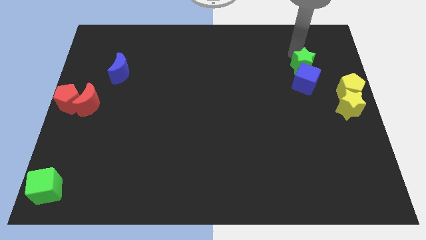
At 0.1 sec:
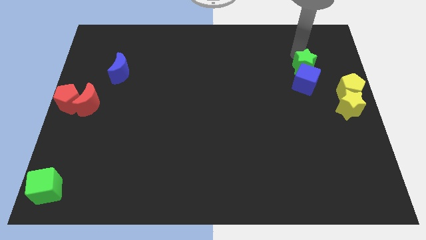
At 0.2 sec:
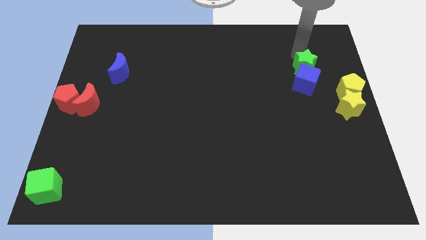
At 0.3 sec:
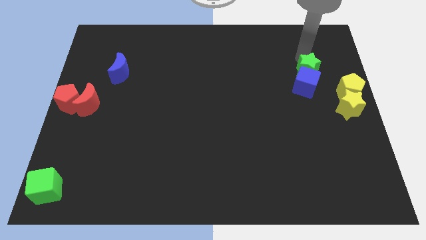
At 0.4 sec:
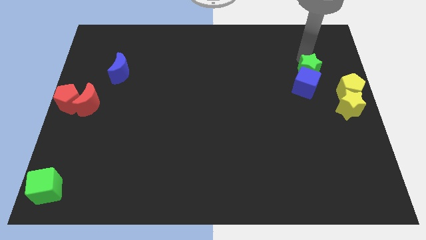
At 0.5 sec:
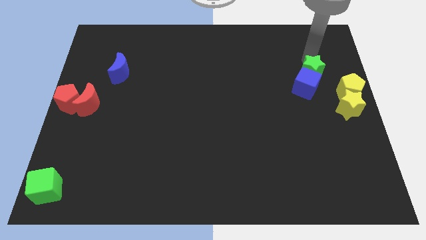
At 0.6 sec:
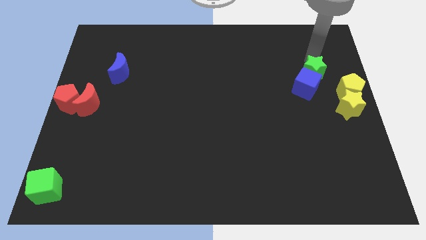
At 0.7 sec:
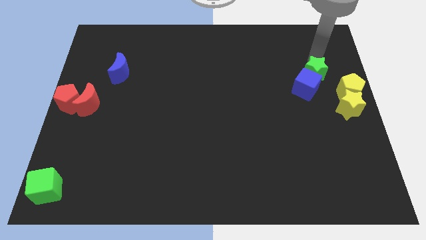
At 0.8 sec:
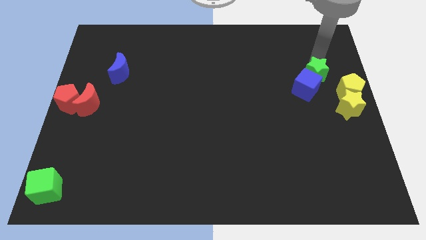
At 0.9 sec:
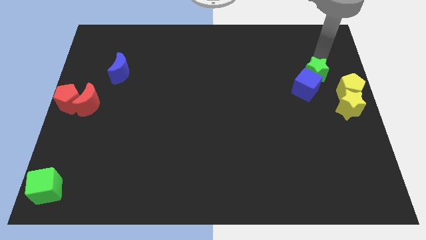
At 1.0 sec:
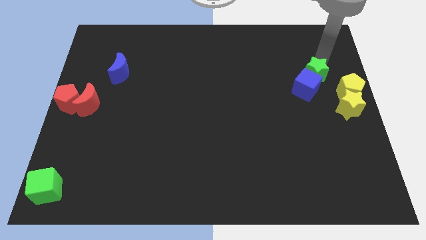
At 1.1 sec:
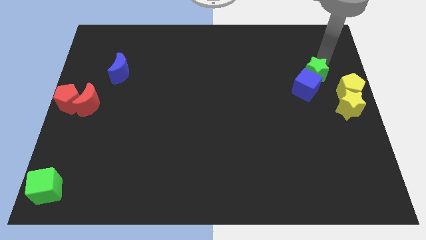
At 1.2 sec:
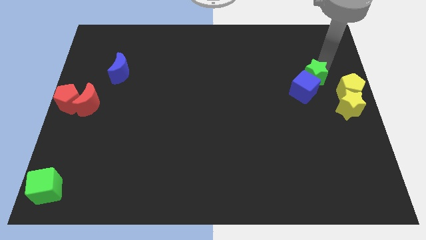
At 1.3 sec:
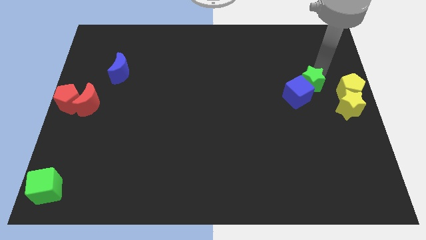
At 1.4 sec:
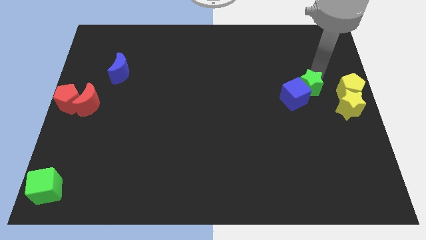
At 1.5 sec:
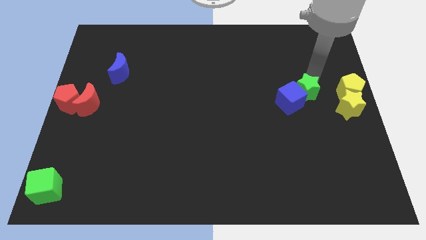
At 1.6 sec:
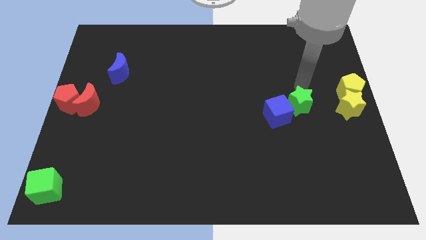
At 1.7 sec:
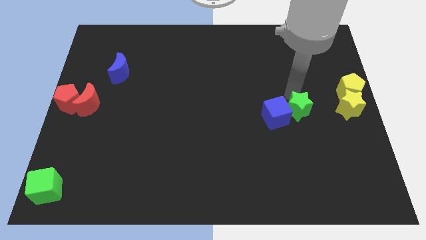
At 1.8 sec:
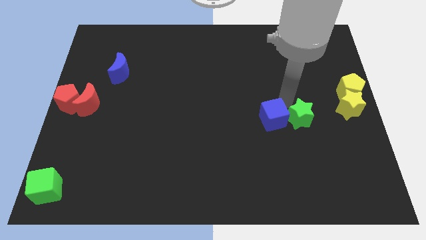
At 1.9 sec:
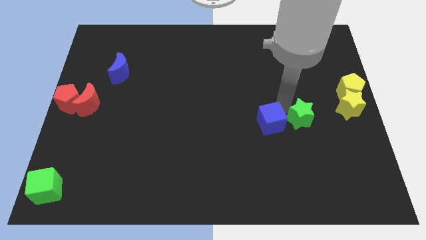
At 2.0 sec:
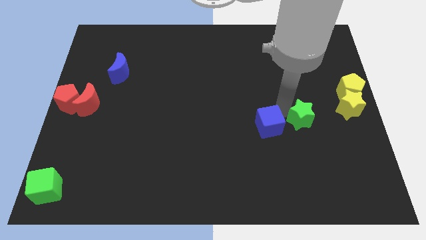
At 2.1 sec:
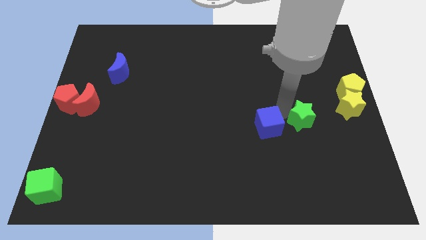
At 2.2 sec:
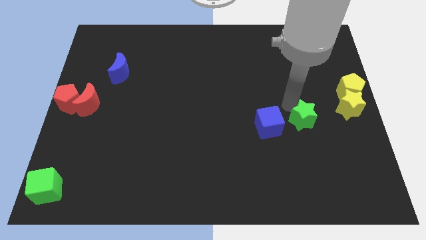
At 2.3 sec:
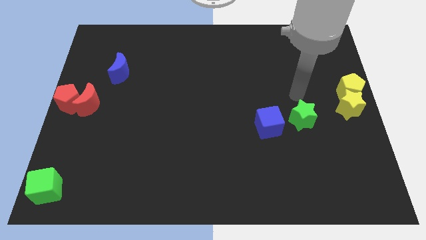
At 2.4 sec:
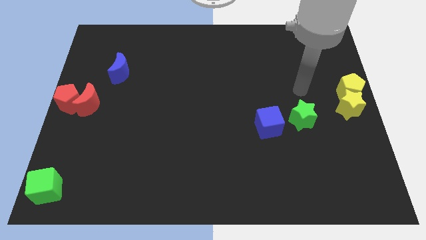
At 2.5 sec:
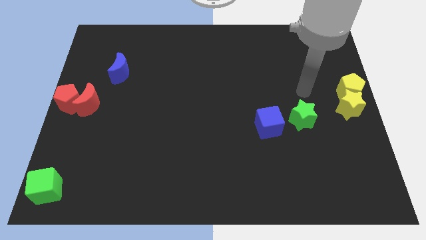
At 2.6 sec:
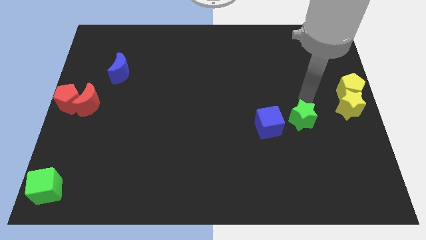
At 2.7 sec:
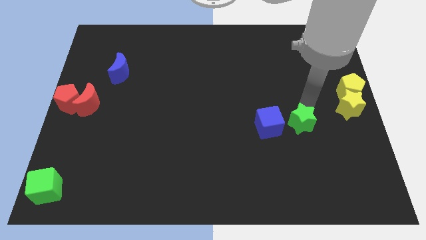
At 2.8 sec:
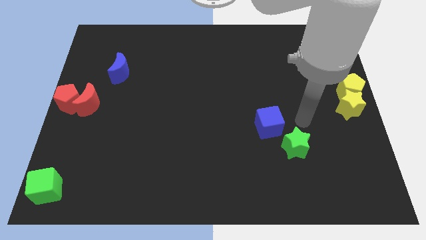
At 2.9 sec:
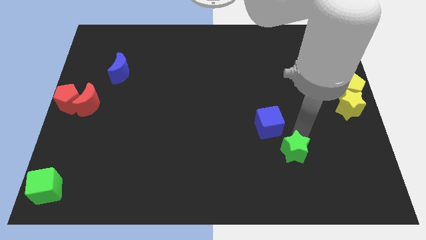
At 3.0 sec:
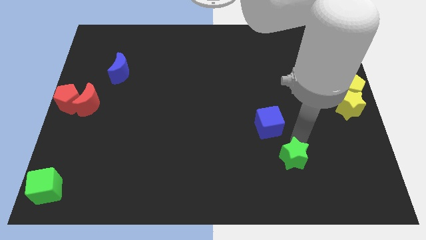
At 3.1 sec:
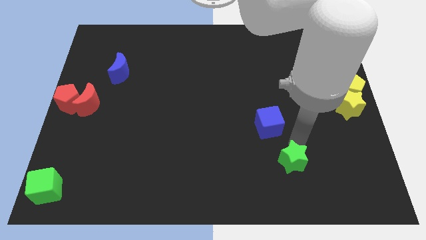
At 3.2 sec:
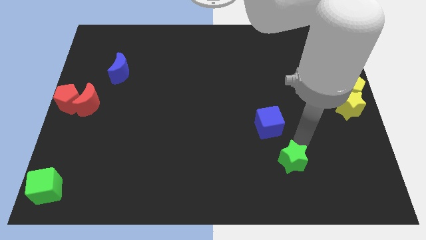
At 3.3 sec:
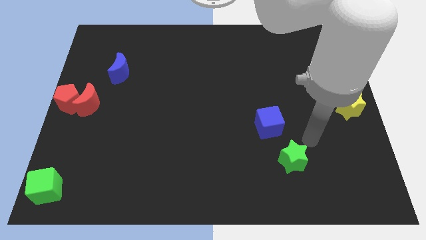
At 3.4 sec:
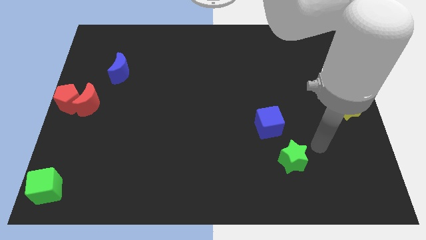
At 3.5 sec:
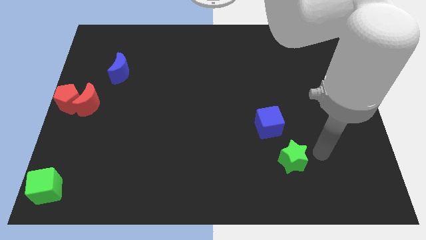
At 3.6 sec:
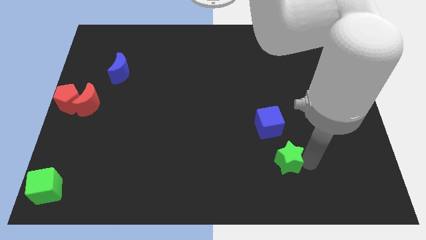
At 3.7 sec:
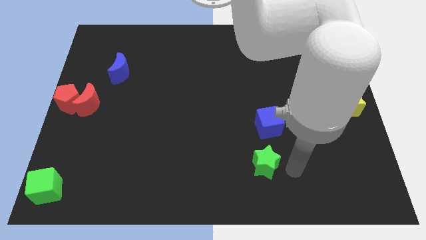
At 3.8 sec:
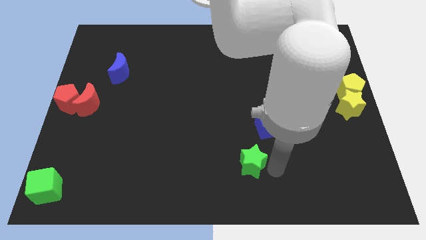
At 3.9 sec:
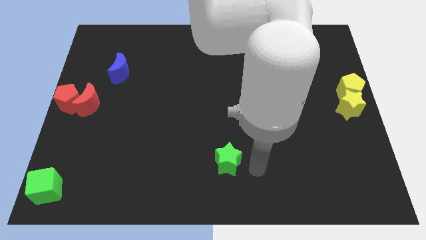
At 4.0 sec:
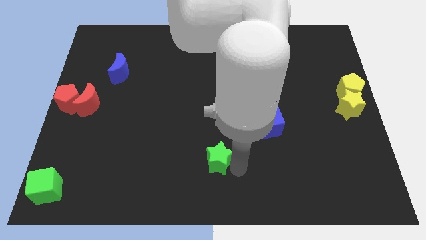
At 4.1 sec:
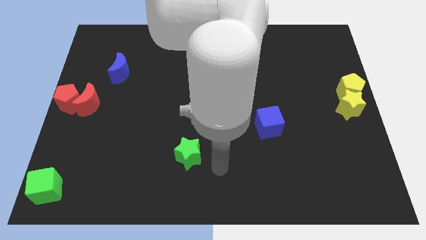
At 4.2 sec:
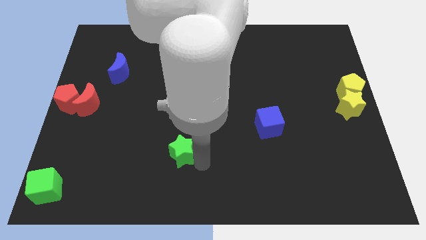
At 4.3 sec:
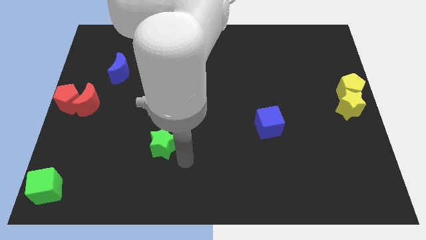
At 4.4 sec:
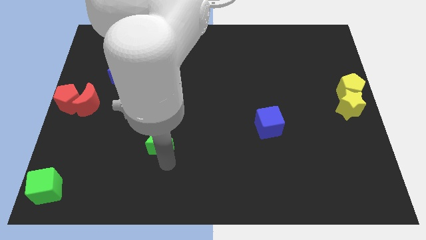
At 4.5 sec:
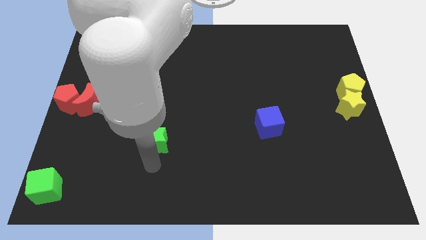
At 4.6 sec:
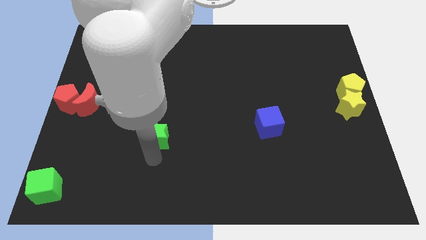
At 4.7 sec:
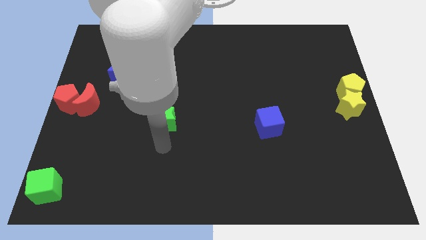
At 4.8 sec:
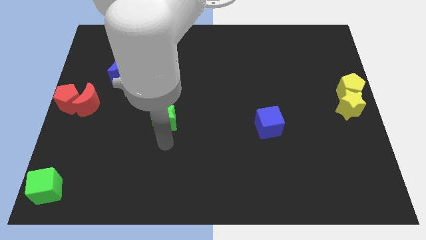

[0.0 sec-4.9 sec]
separate the green star from blue cube

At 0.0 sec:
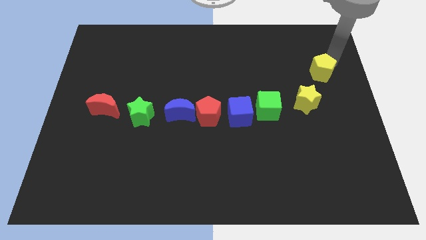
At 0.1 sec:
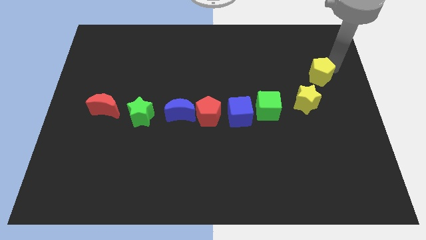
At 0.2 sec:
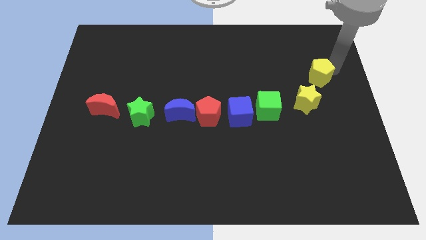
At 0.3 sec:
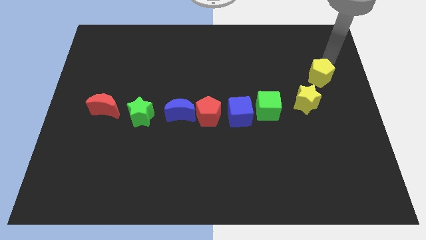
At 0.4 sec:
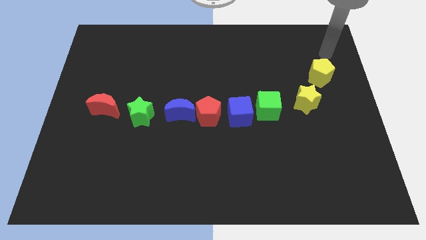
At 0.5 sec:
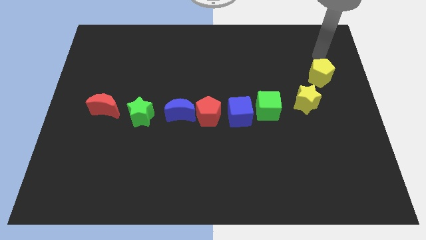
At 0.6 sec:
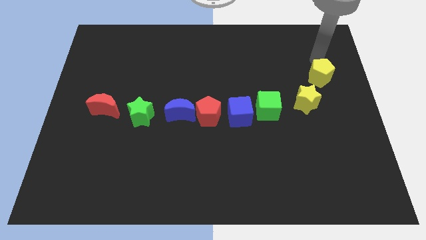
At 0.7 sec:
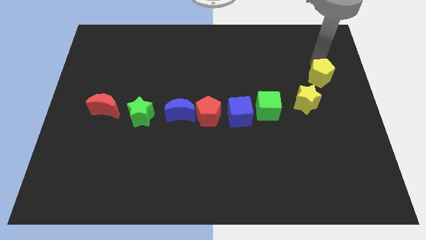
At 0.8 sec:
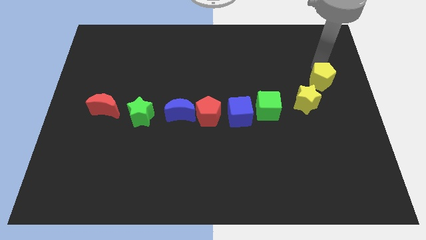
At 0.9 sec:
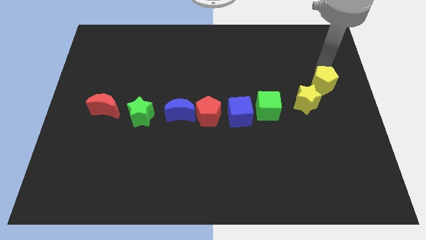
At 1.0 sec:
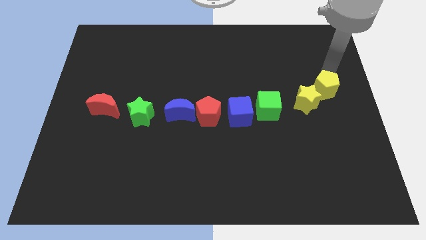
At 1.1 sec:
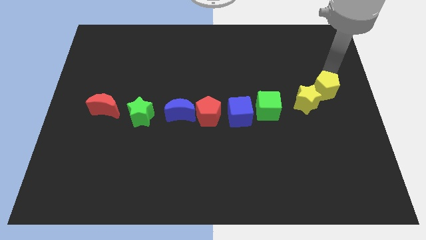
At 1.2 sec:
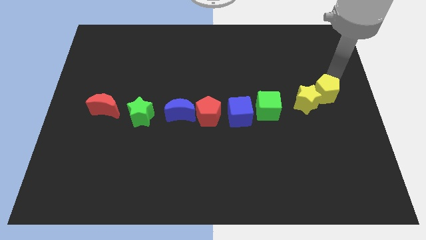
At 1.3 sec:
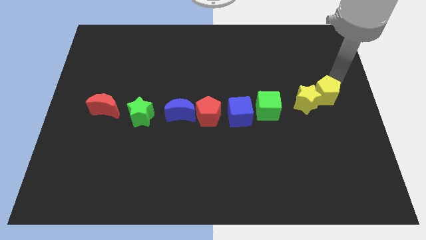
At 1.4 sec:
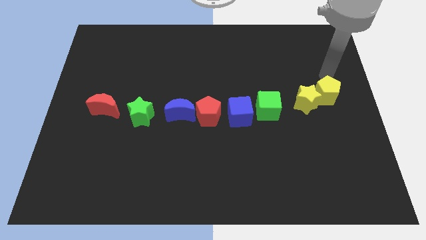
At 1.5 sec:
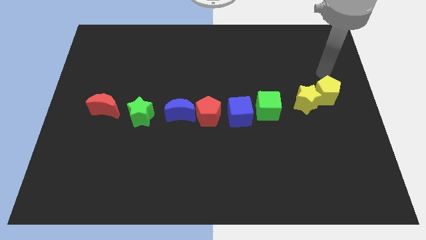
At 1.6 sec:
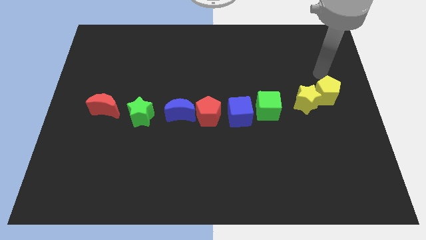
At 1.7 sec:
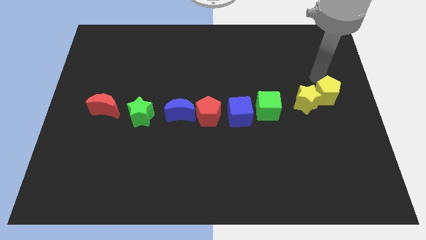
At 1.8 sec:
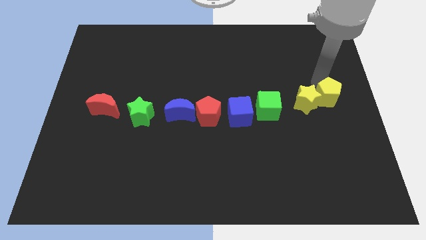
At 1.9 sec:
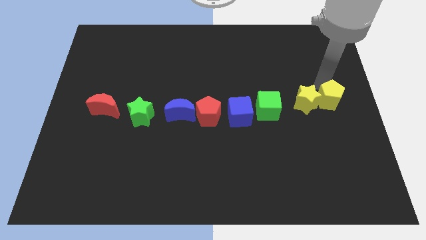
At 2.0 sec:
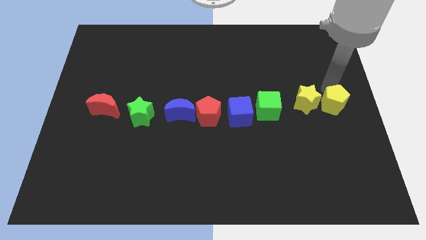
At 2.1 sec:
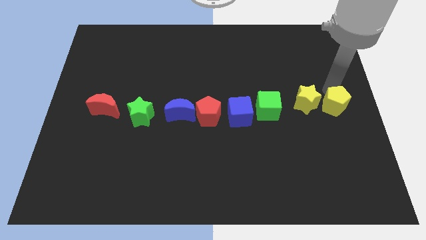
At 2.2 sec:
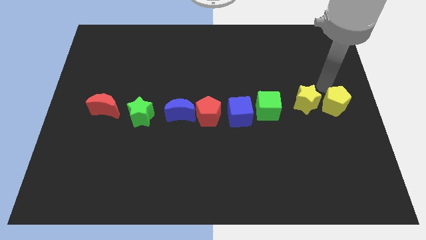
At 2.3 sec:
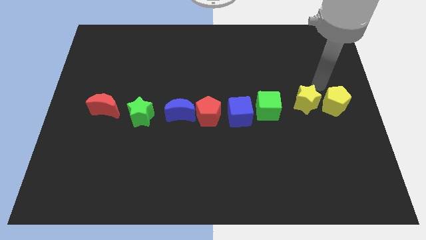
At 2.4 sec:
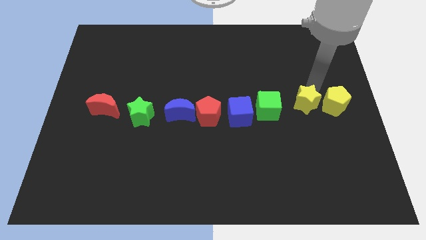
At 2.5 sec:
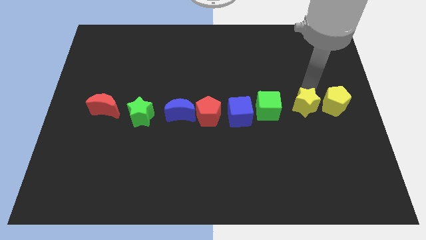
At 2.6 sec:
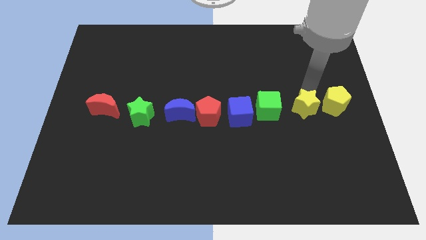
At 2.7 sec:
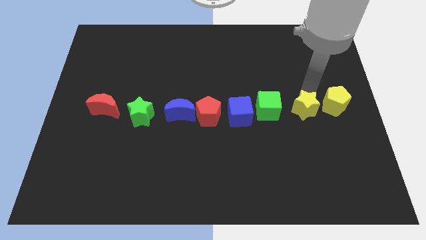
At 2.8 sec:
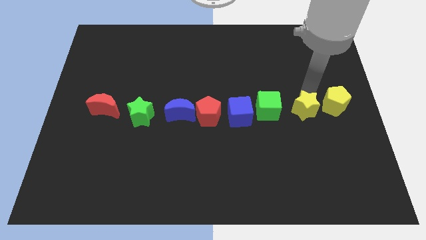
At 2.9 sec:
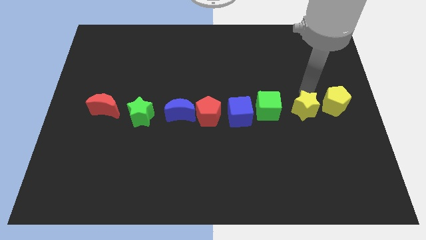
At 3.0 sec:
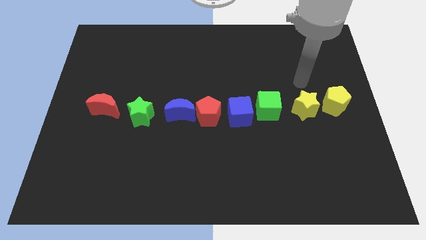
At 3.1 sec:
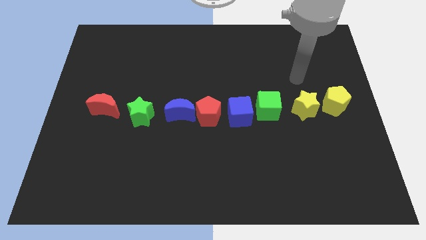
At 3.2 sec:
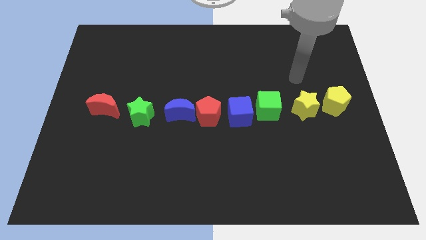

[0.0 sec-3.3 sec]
move the yellow pentagon to the right side of the yellow star

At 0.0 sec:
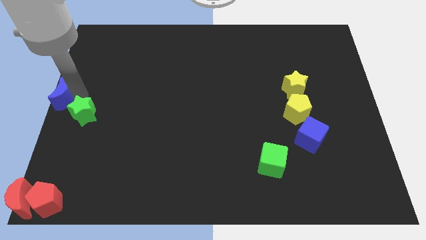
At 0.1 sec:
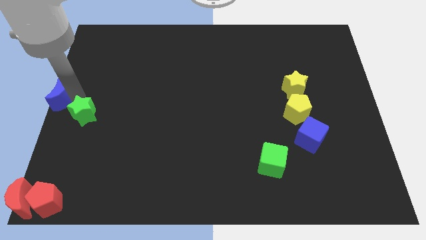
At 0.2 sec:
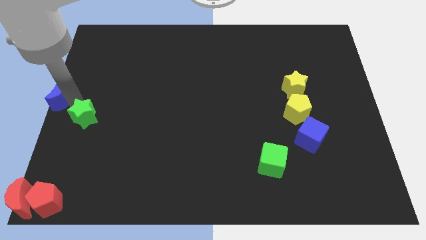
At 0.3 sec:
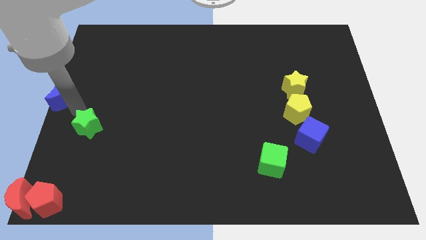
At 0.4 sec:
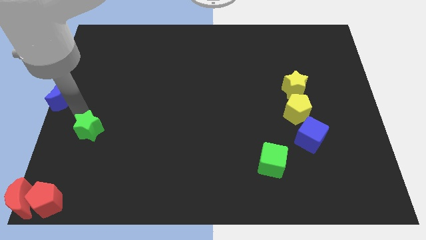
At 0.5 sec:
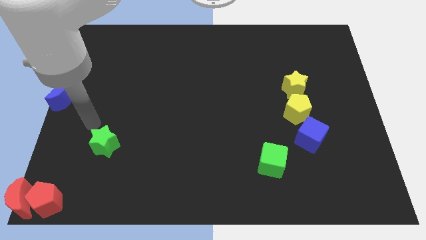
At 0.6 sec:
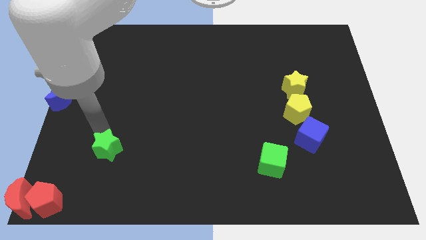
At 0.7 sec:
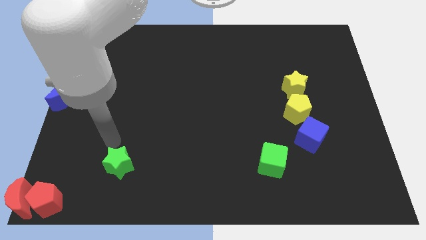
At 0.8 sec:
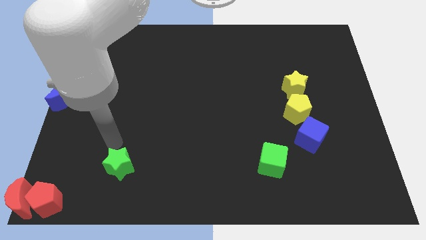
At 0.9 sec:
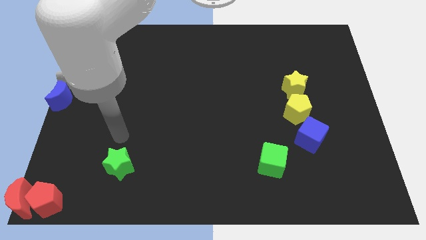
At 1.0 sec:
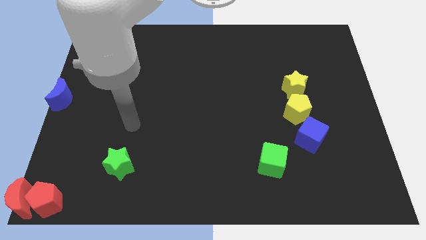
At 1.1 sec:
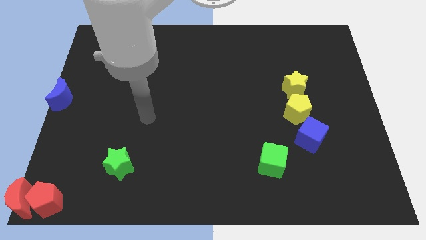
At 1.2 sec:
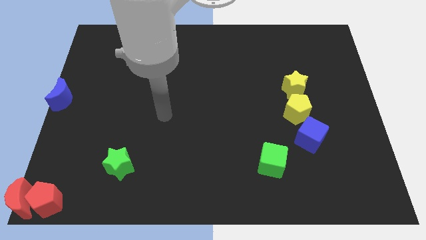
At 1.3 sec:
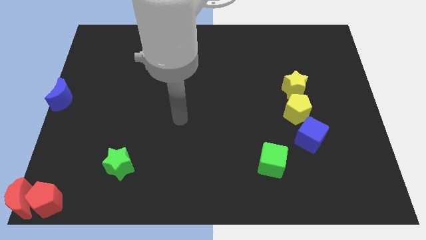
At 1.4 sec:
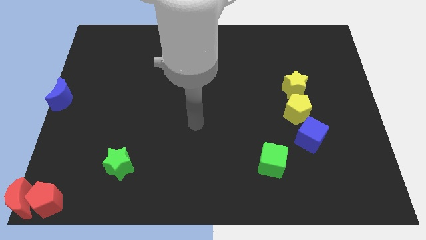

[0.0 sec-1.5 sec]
separate the green star from blue crescent
